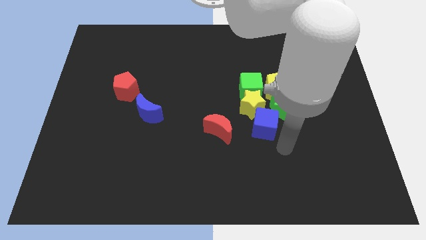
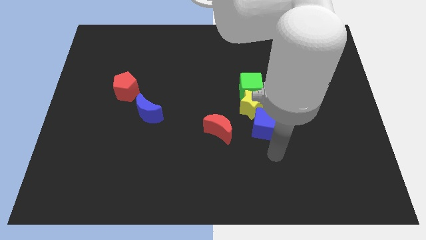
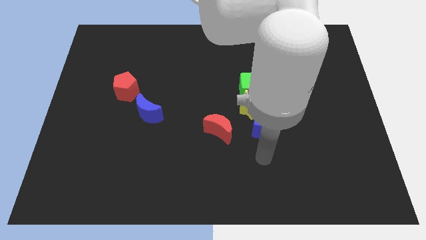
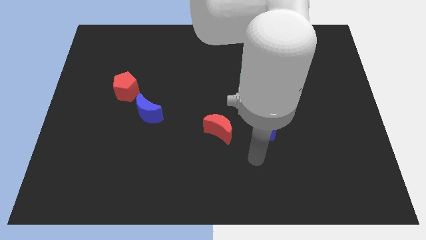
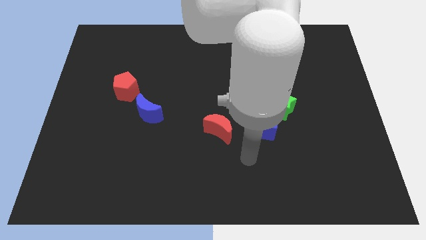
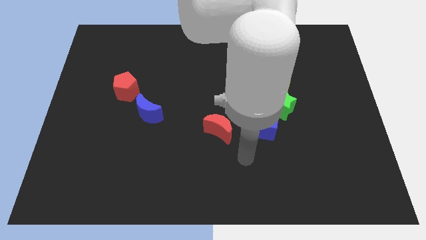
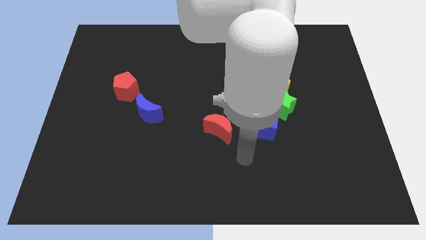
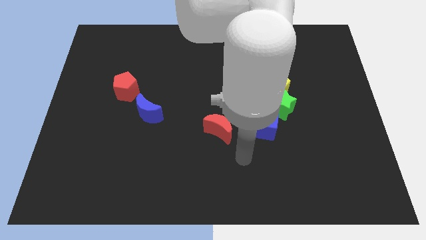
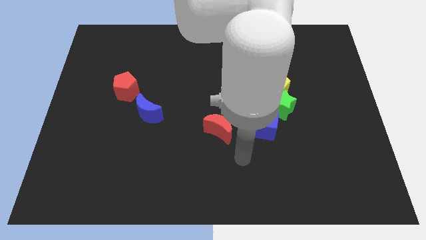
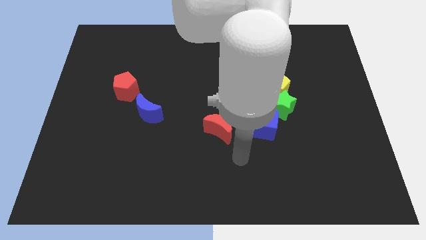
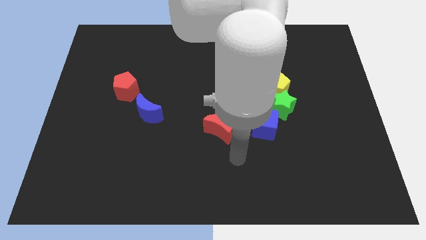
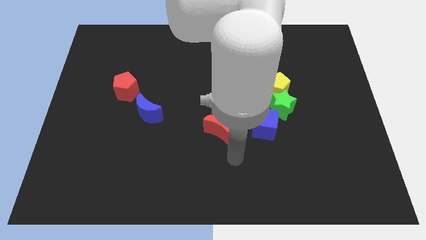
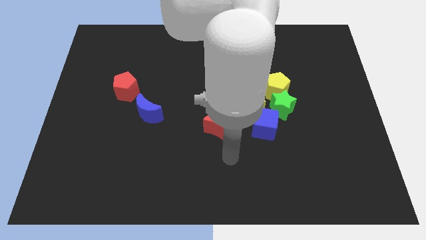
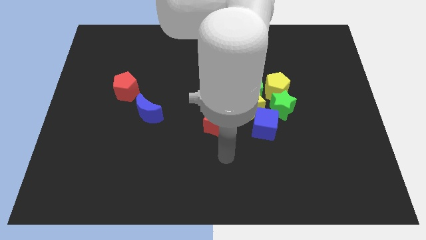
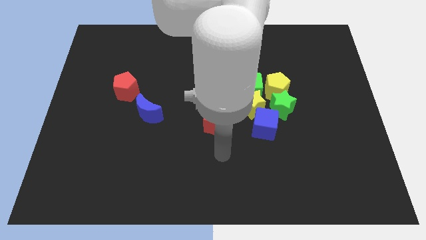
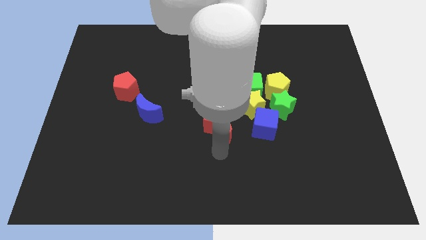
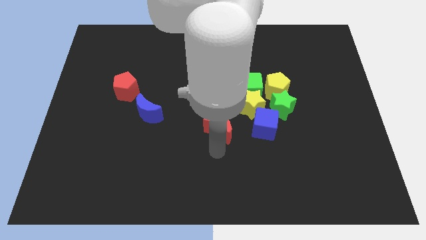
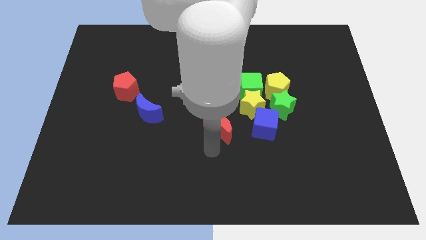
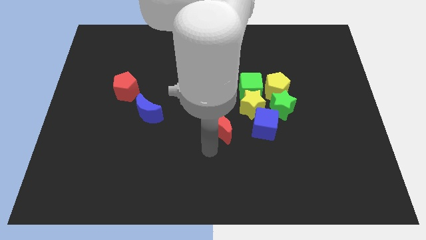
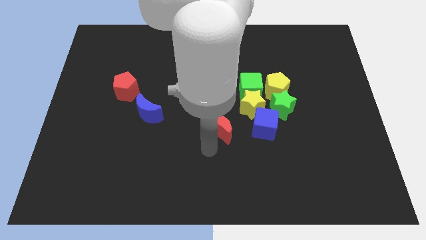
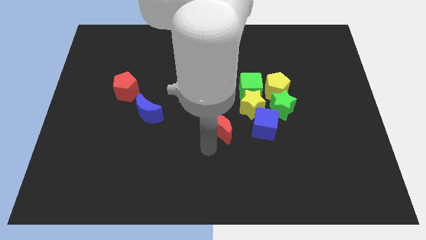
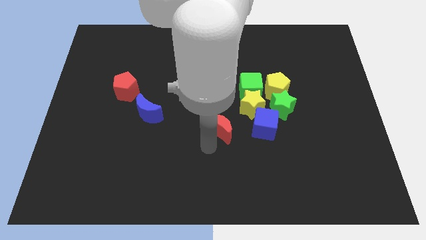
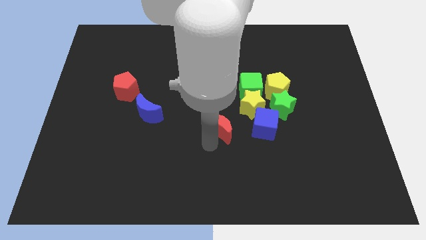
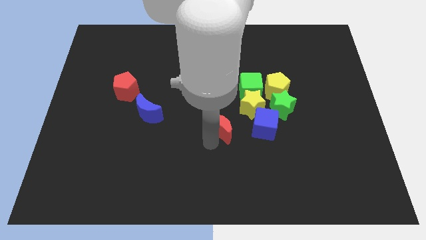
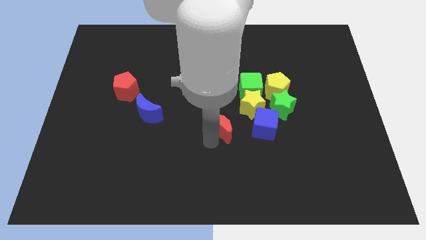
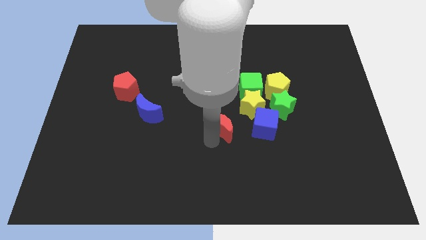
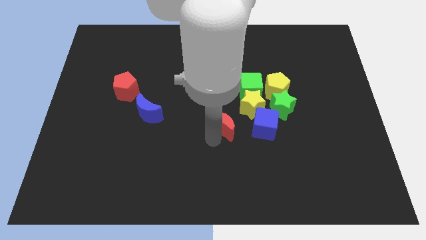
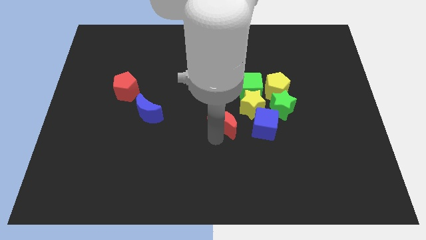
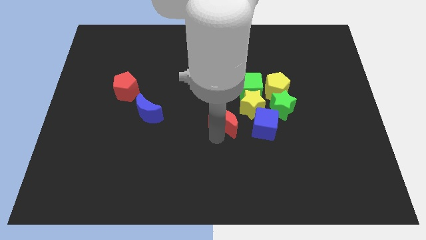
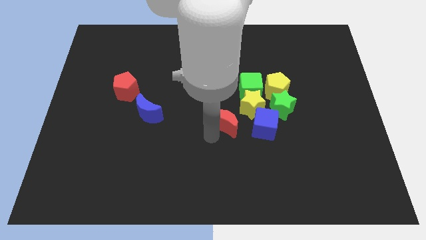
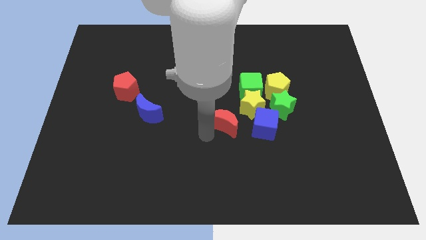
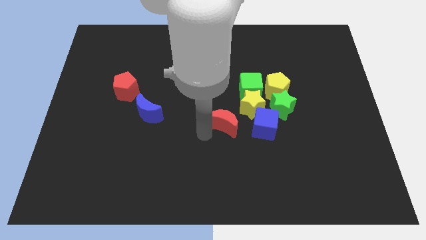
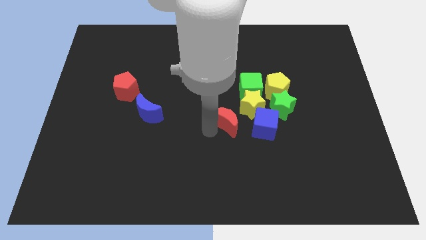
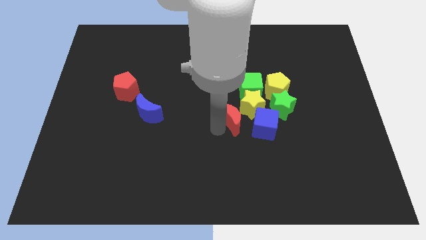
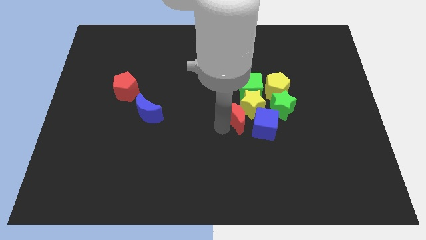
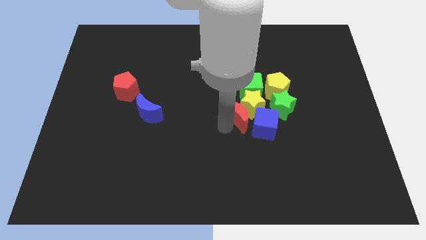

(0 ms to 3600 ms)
move red crescent into yellow star

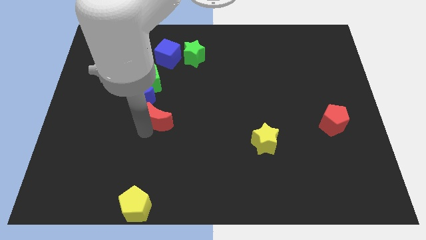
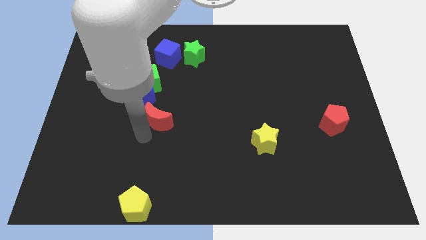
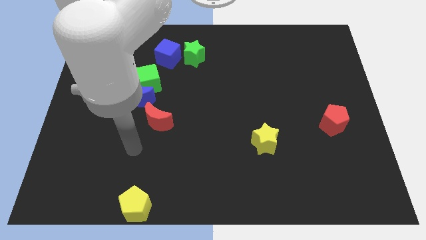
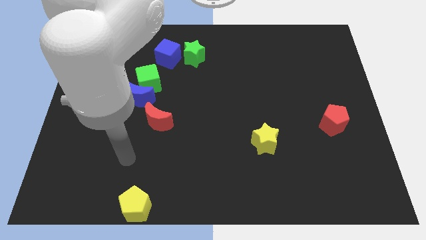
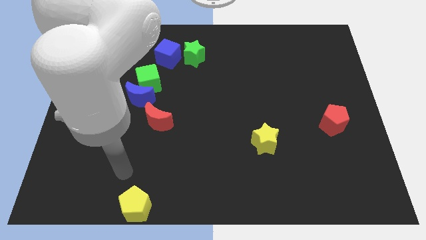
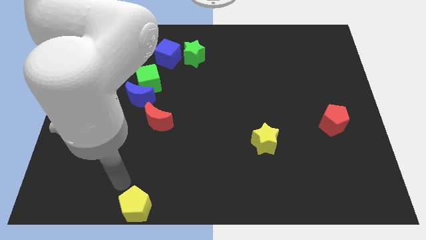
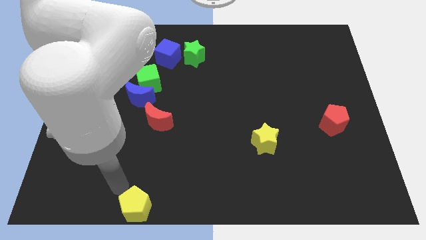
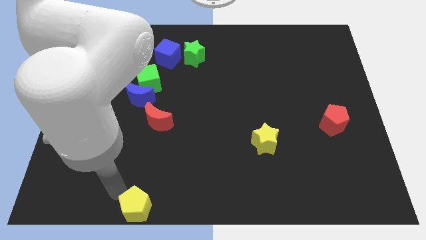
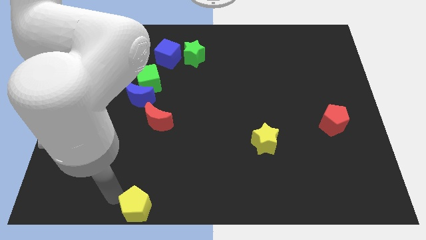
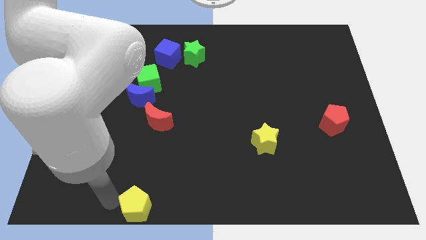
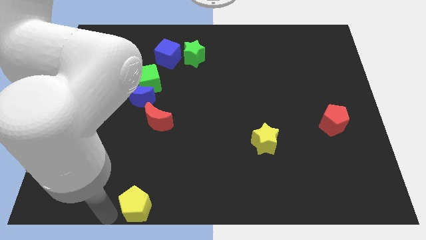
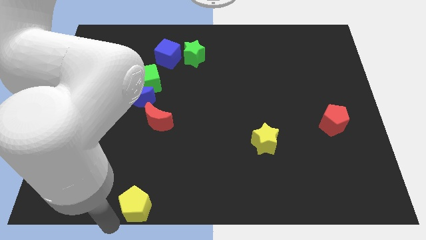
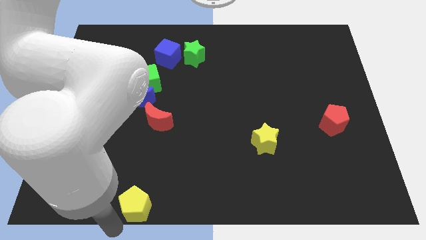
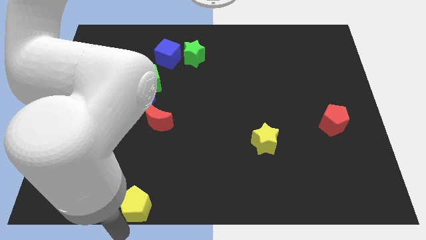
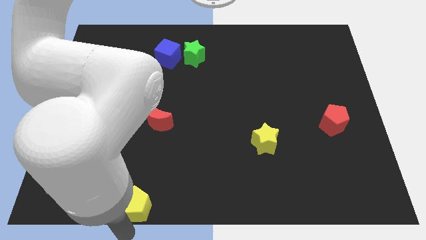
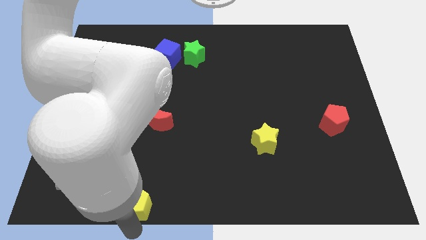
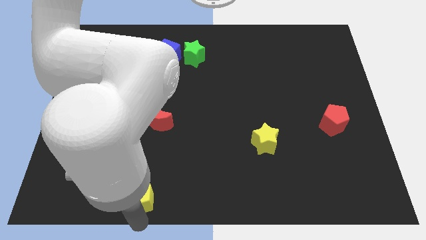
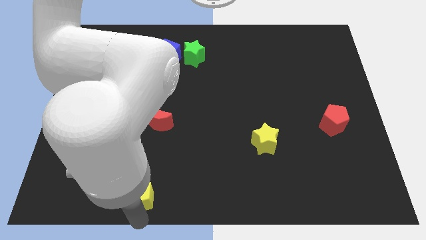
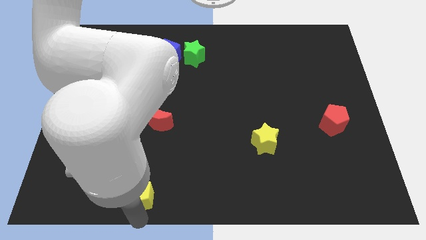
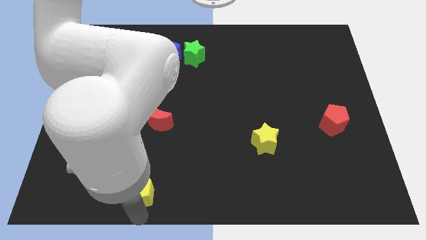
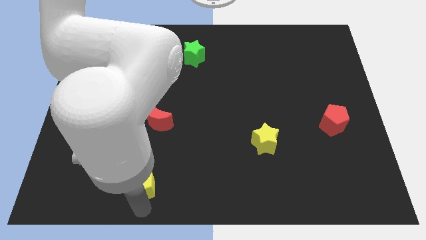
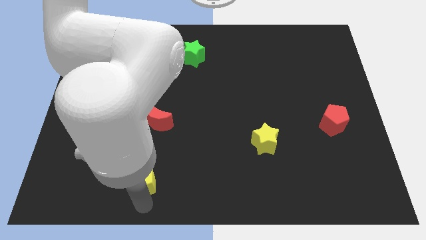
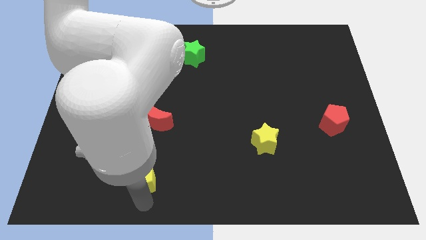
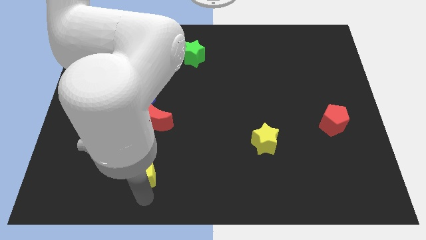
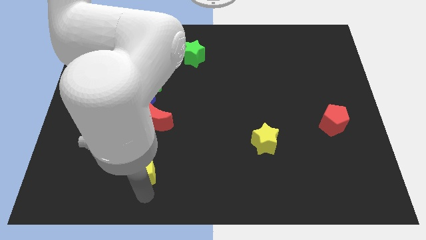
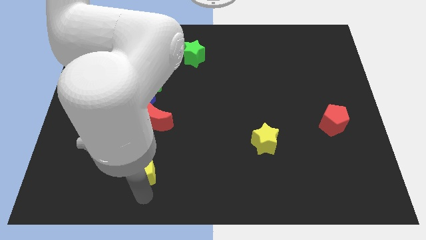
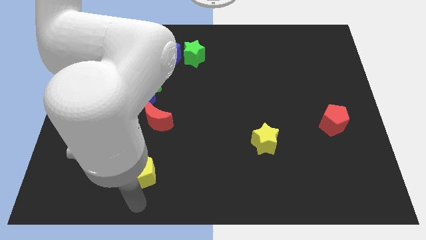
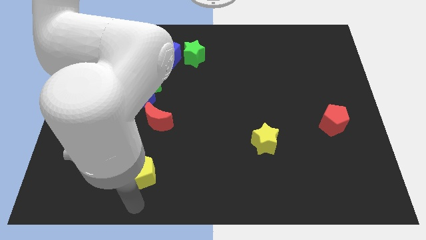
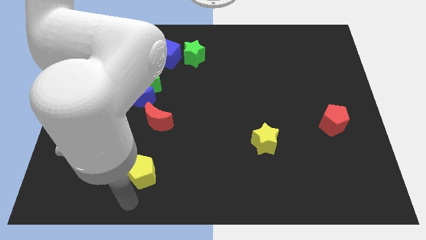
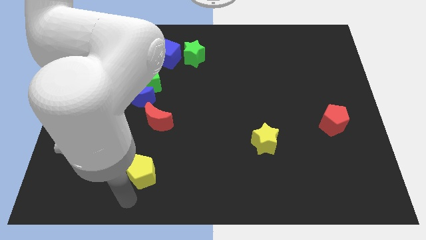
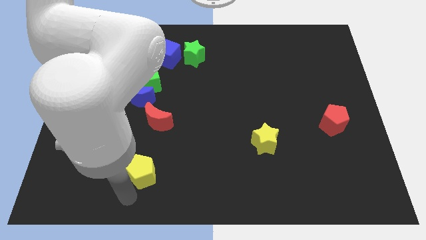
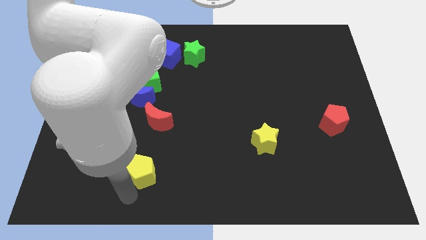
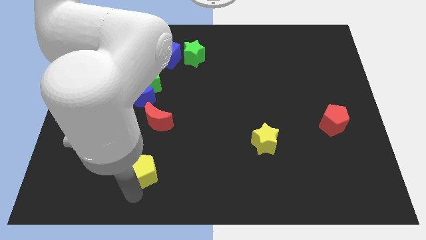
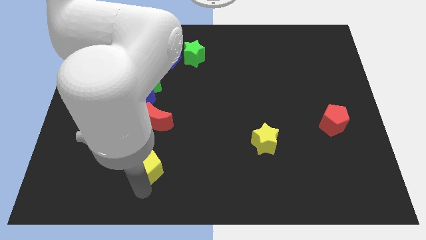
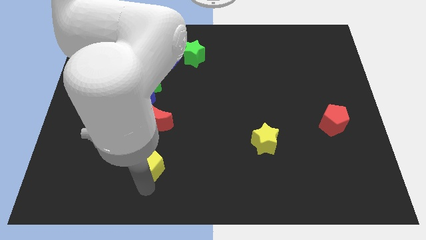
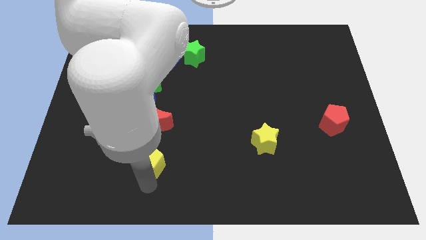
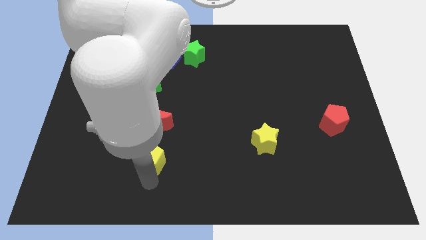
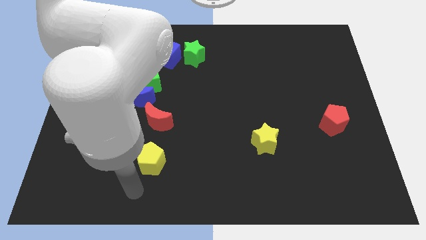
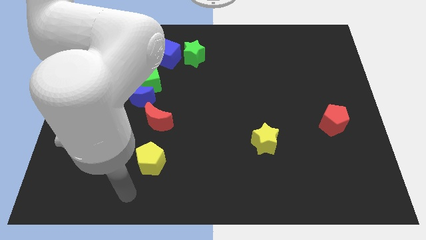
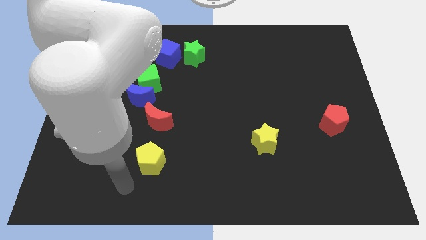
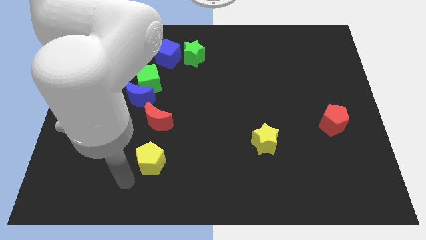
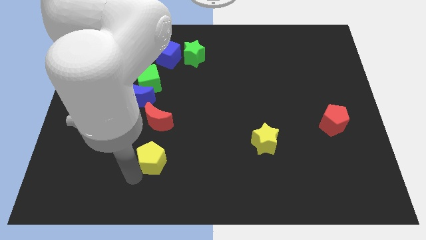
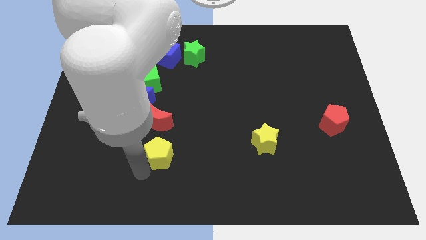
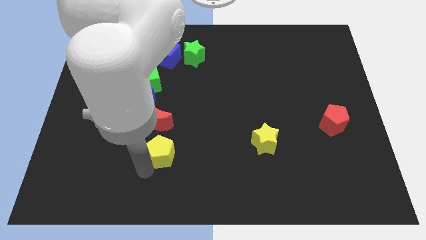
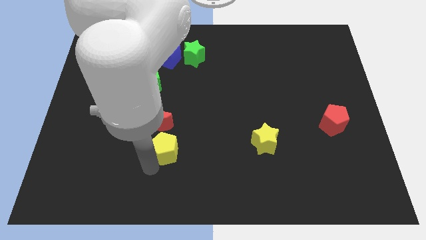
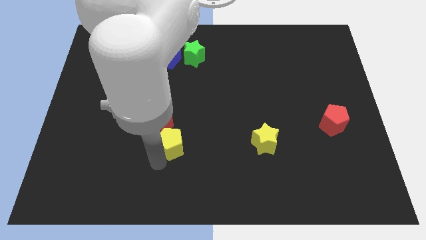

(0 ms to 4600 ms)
move the yellow pentagon to the left of the yellow star

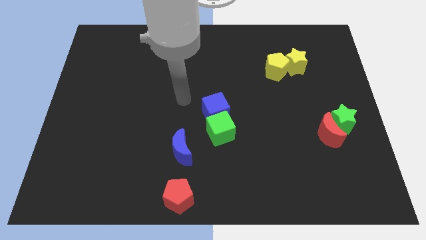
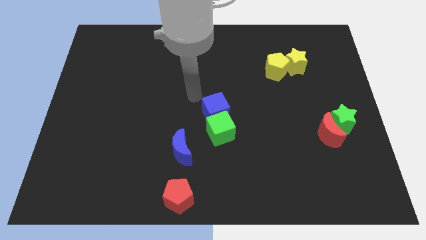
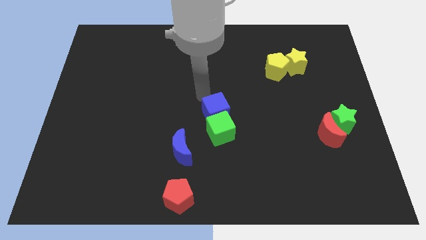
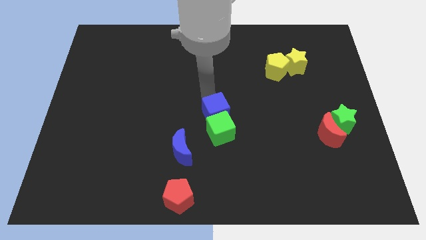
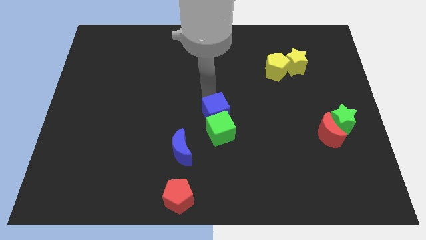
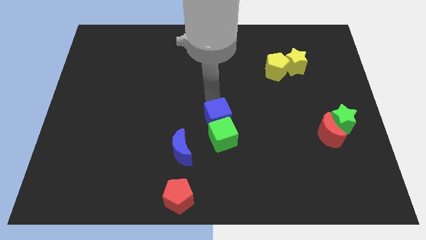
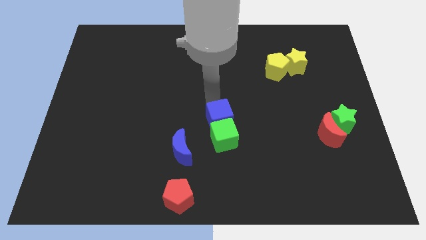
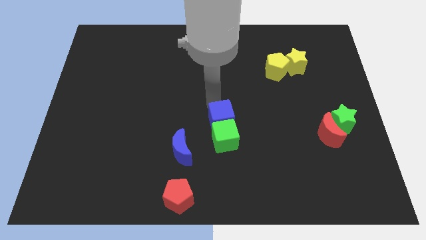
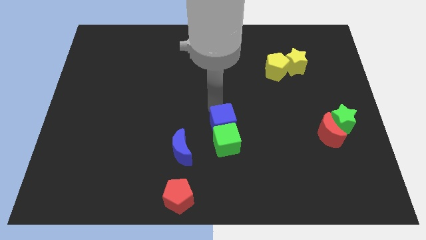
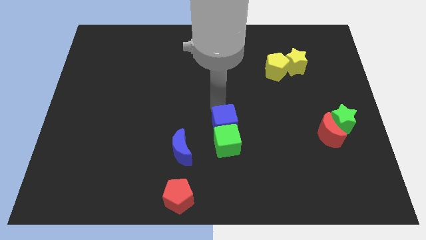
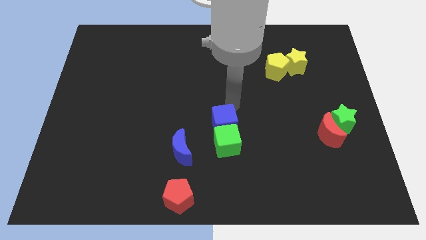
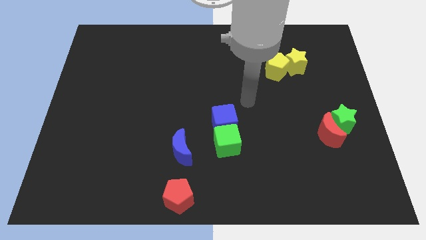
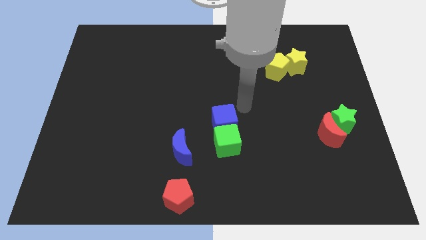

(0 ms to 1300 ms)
push the cubes towards the bottom side of the board
